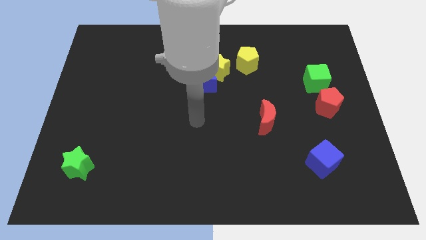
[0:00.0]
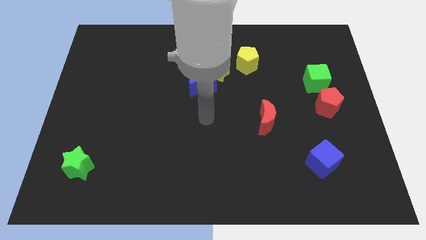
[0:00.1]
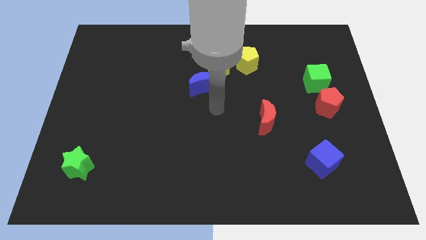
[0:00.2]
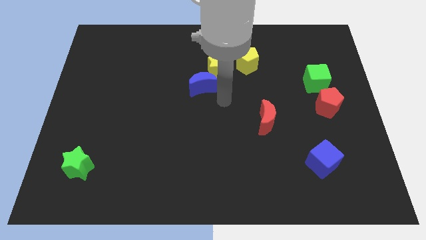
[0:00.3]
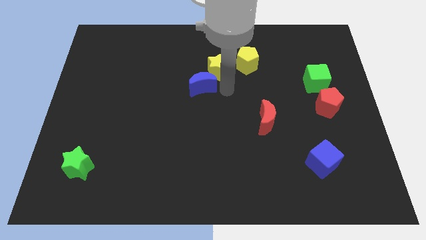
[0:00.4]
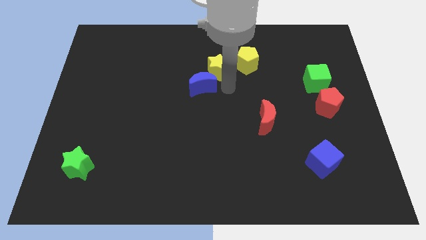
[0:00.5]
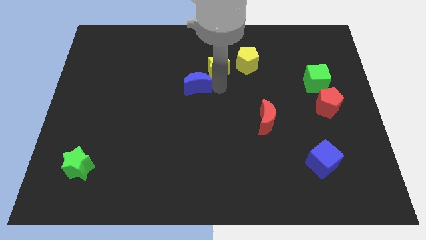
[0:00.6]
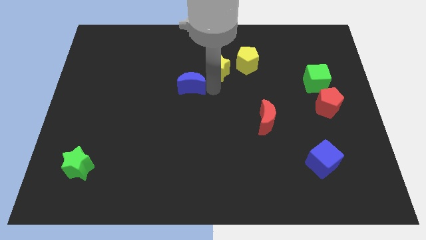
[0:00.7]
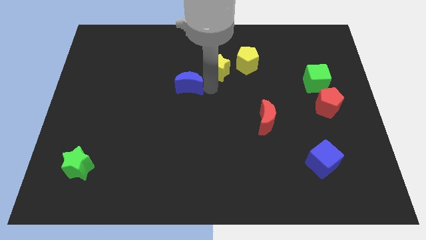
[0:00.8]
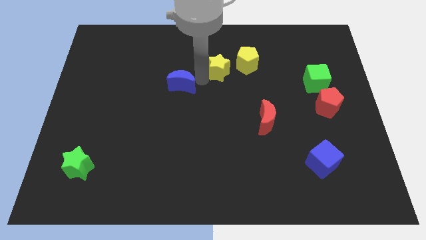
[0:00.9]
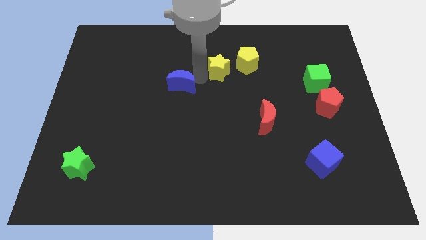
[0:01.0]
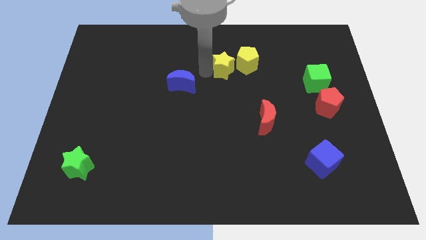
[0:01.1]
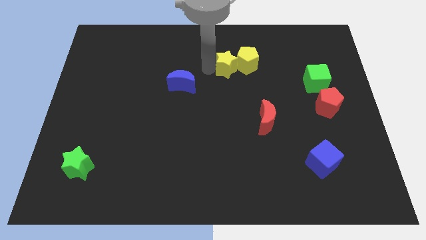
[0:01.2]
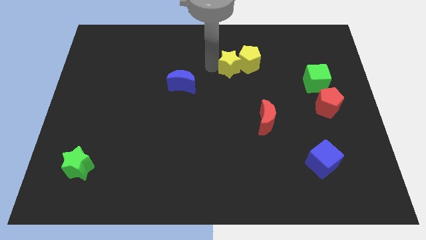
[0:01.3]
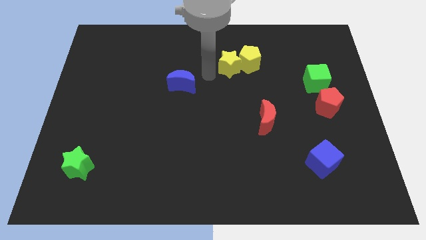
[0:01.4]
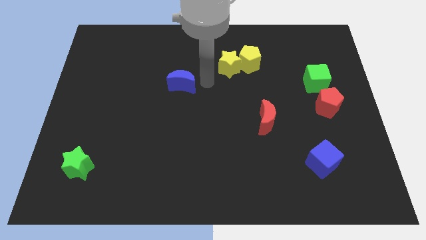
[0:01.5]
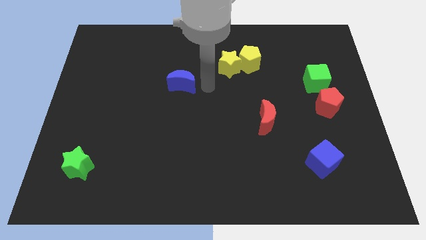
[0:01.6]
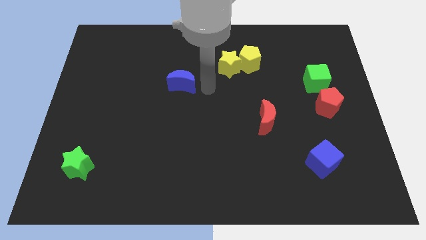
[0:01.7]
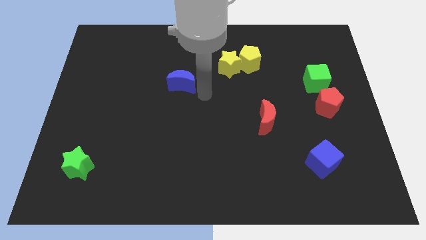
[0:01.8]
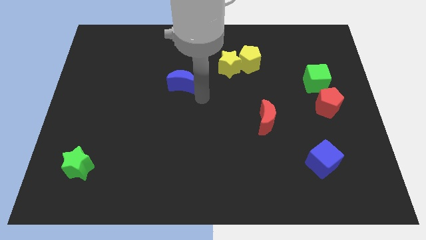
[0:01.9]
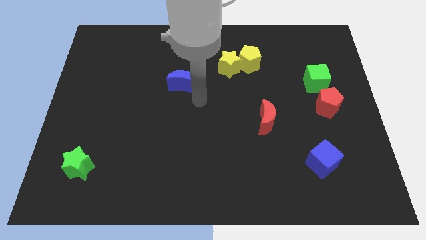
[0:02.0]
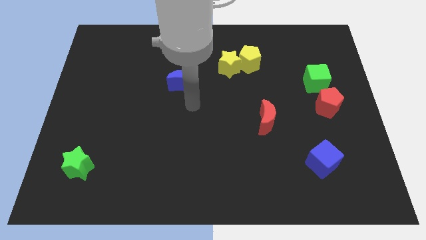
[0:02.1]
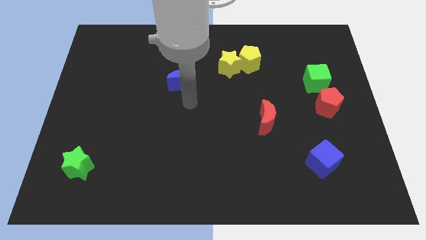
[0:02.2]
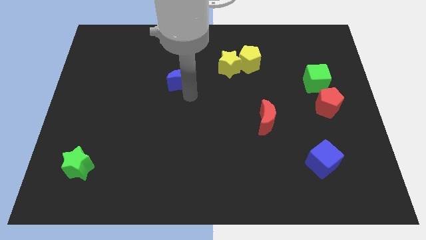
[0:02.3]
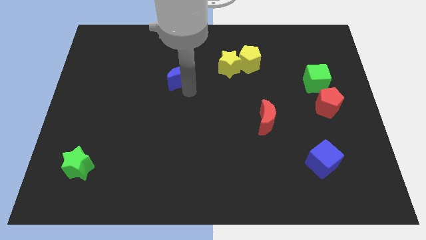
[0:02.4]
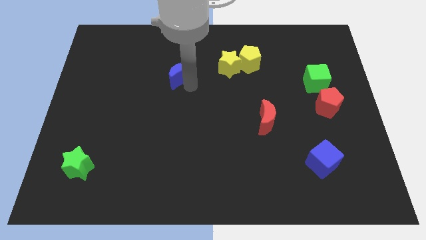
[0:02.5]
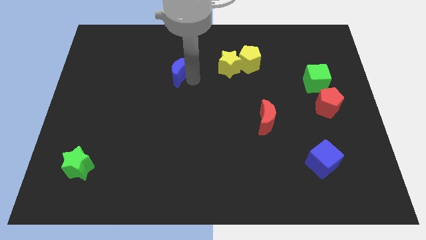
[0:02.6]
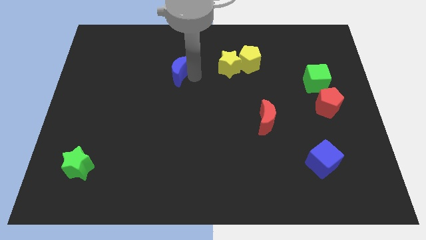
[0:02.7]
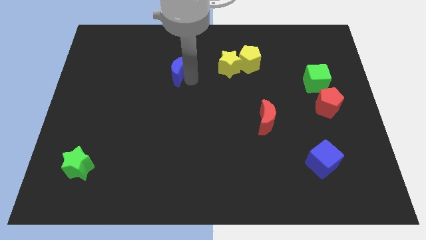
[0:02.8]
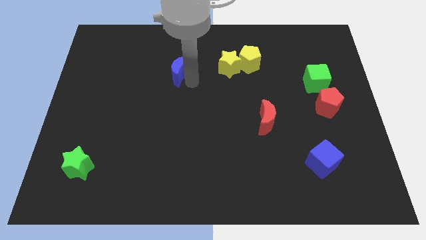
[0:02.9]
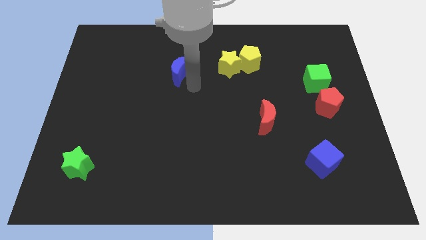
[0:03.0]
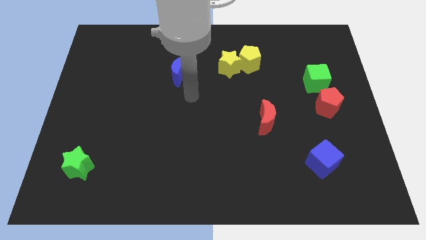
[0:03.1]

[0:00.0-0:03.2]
separate blue moon from the yellow star

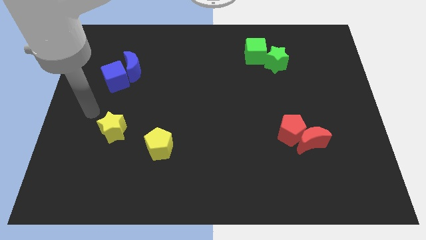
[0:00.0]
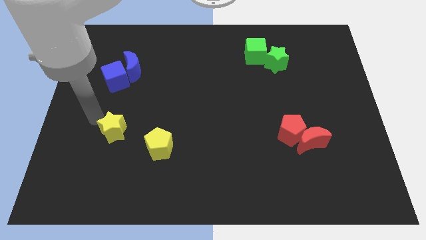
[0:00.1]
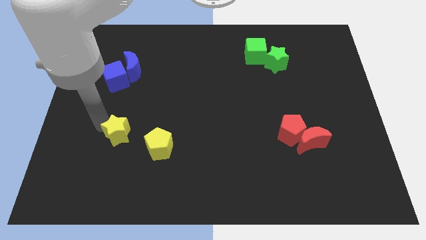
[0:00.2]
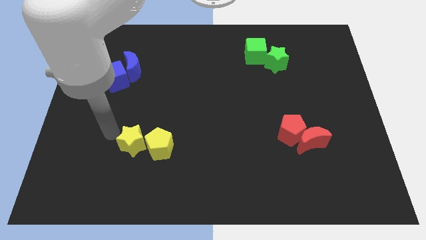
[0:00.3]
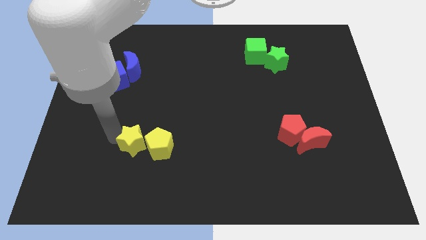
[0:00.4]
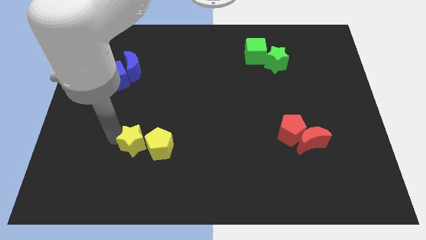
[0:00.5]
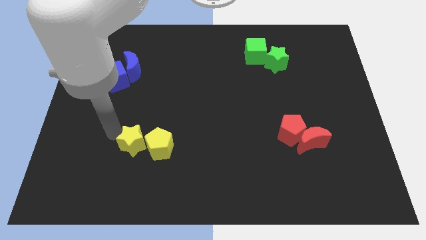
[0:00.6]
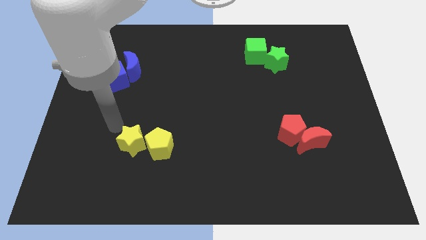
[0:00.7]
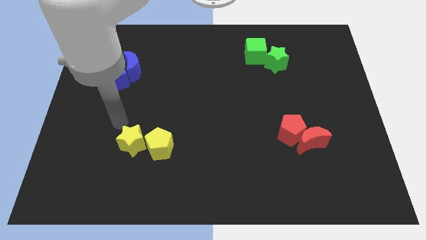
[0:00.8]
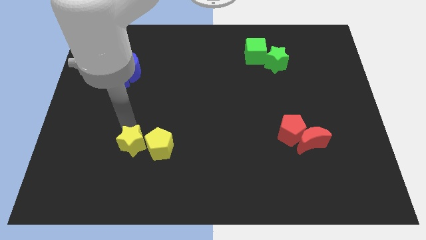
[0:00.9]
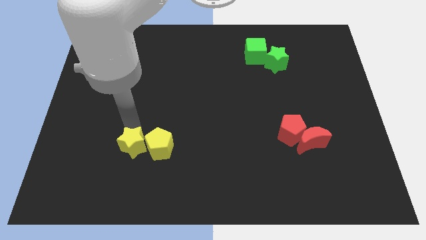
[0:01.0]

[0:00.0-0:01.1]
move yellow star towards yellow pentagon

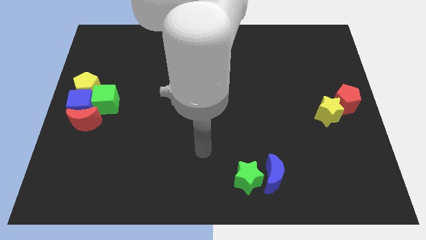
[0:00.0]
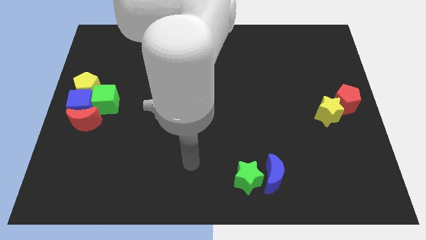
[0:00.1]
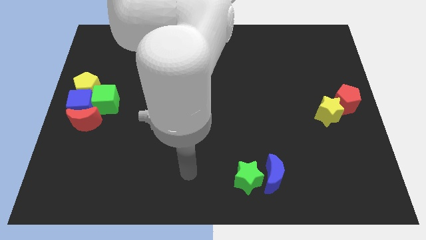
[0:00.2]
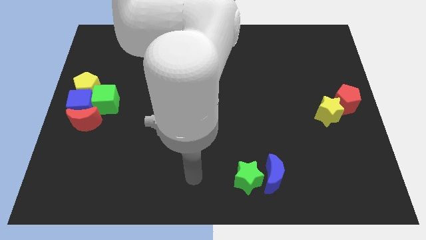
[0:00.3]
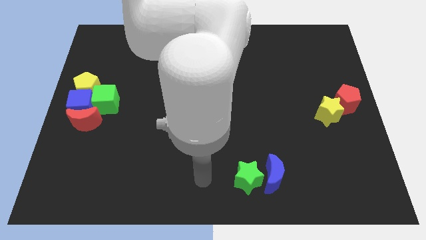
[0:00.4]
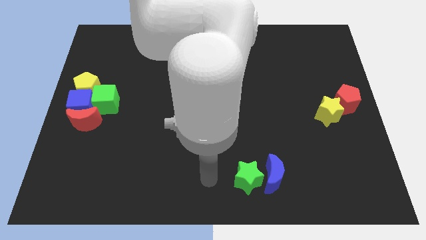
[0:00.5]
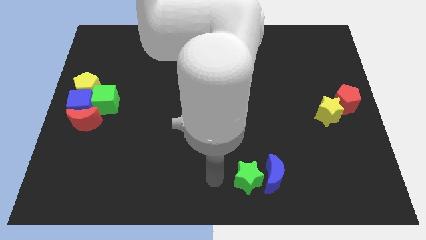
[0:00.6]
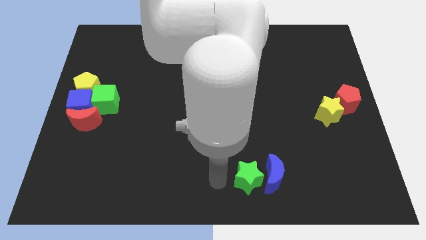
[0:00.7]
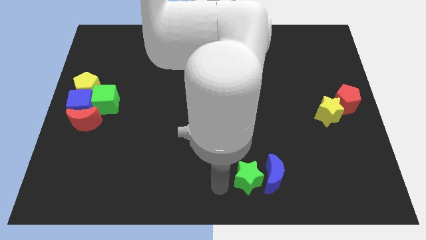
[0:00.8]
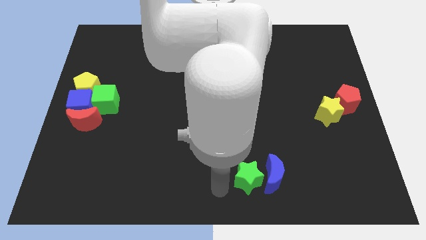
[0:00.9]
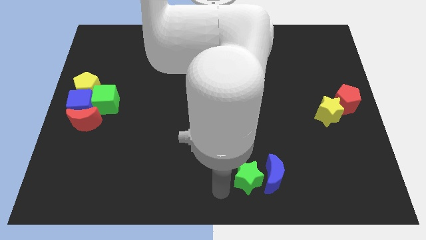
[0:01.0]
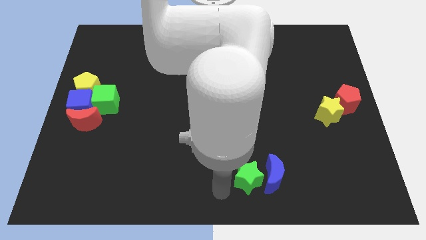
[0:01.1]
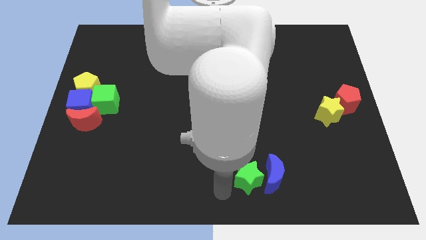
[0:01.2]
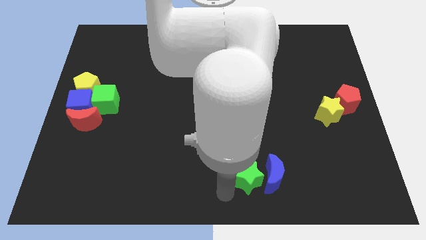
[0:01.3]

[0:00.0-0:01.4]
point your arm below the green star

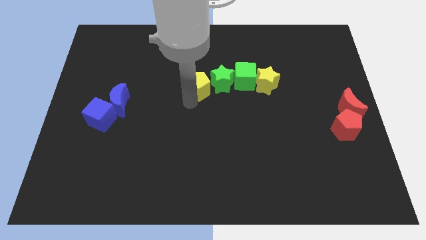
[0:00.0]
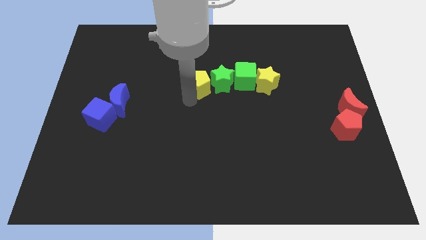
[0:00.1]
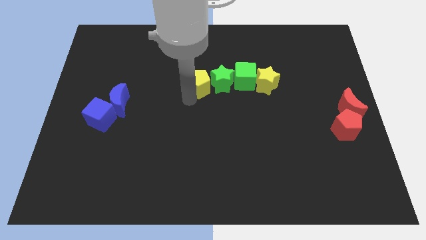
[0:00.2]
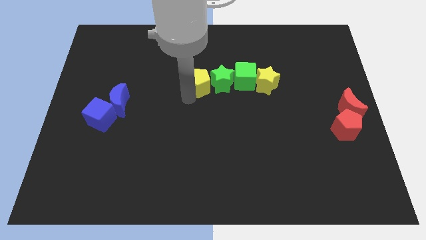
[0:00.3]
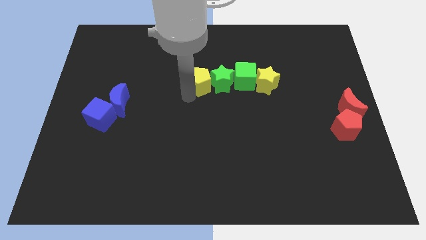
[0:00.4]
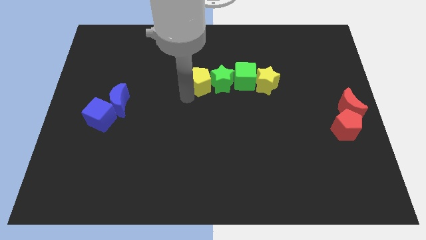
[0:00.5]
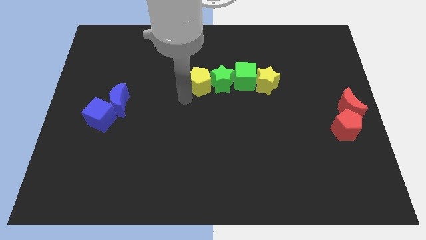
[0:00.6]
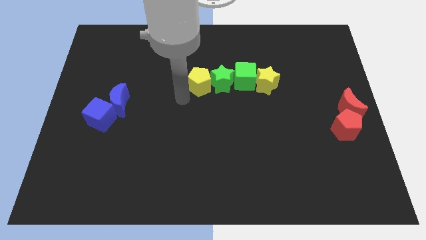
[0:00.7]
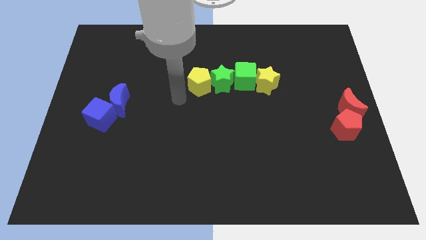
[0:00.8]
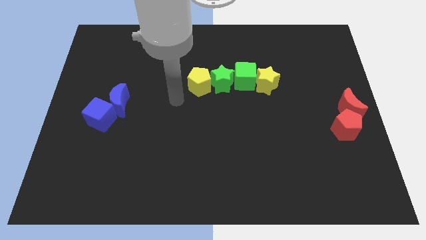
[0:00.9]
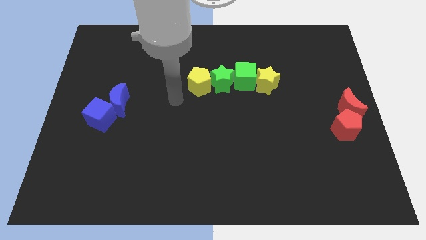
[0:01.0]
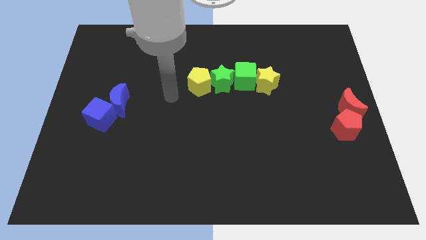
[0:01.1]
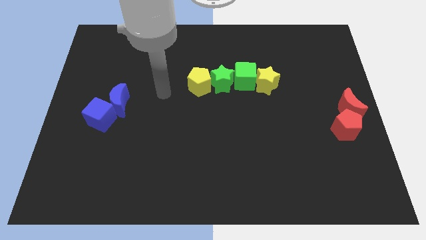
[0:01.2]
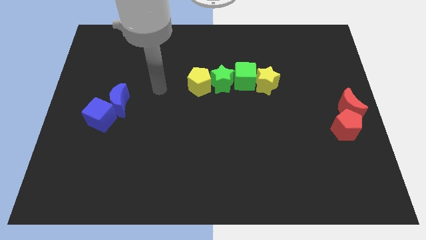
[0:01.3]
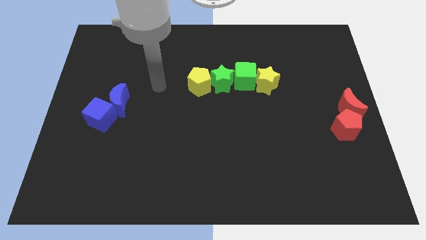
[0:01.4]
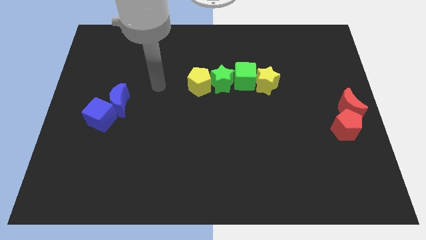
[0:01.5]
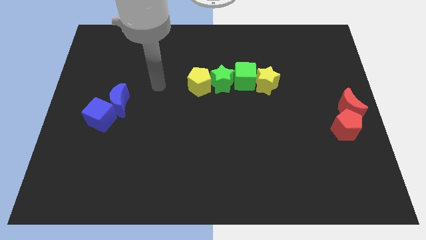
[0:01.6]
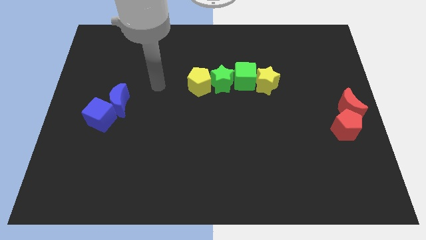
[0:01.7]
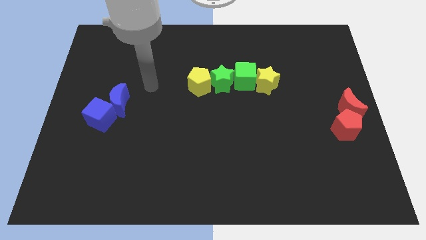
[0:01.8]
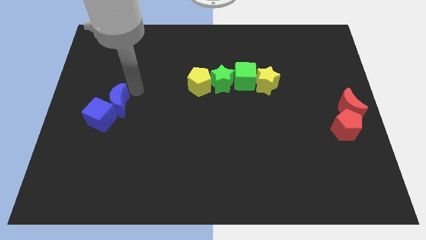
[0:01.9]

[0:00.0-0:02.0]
move the yellow pentagon to the left side of the green star

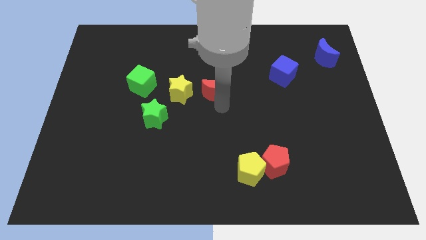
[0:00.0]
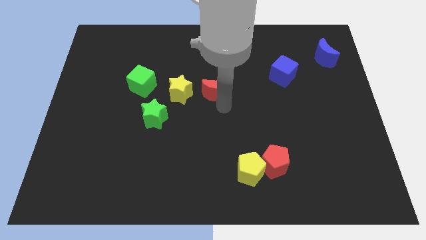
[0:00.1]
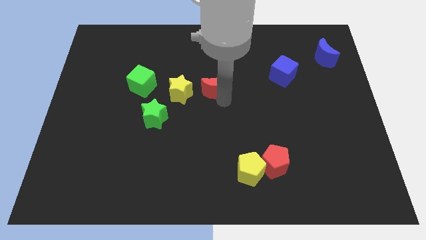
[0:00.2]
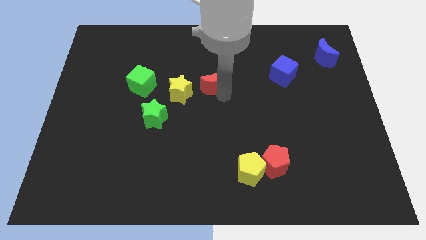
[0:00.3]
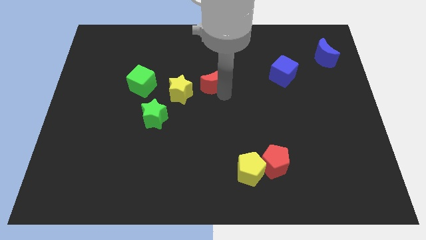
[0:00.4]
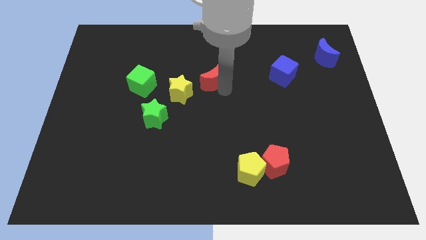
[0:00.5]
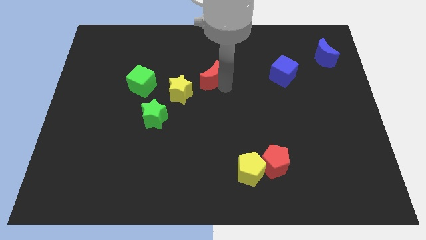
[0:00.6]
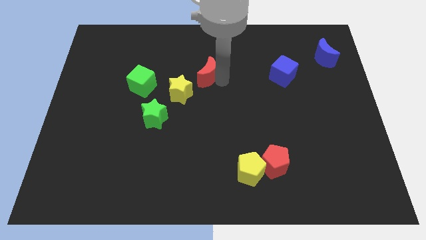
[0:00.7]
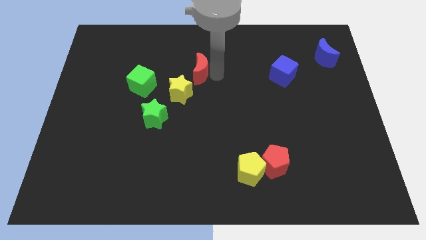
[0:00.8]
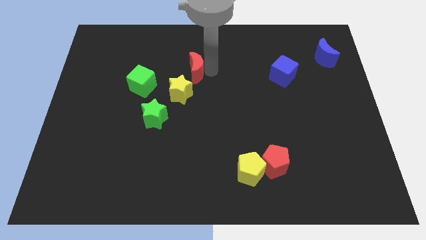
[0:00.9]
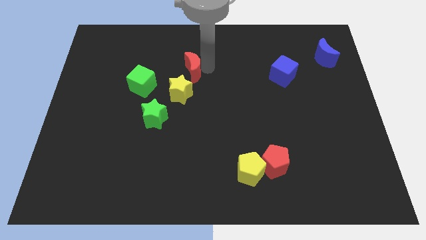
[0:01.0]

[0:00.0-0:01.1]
place red moon above yellow star

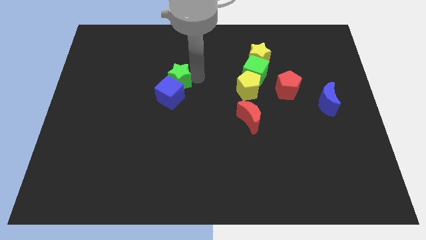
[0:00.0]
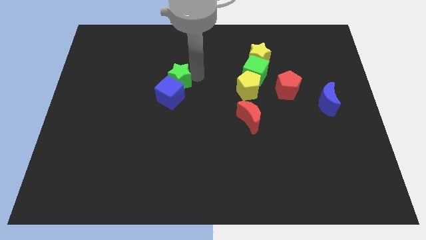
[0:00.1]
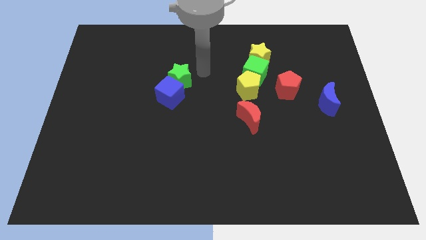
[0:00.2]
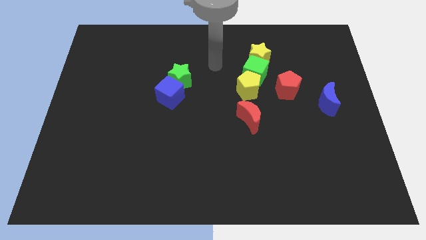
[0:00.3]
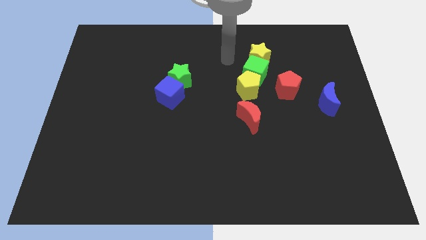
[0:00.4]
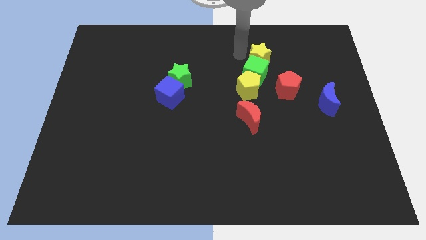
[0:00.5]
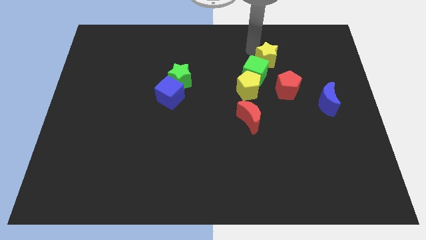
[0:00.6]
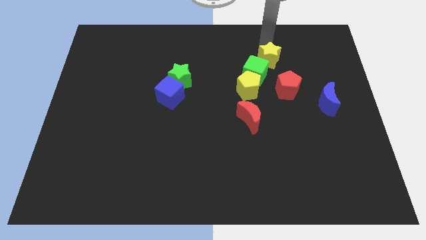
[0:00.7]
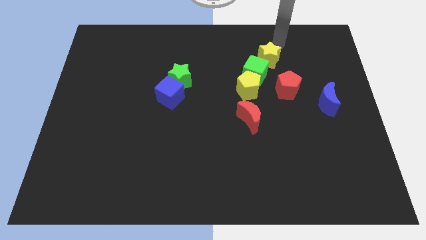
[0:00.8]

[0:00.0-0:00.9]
slightly move yellow star towards its right
